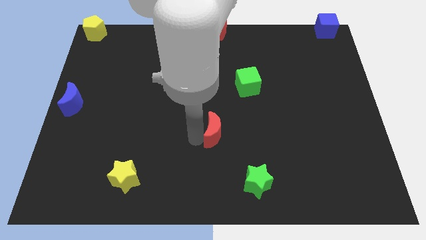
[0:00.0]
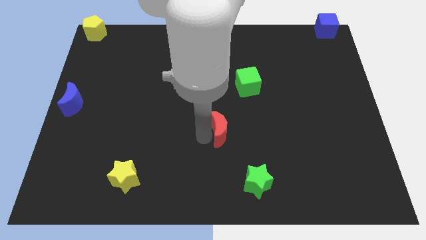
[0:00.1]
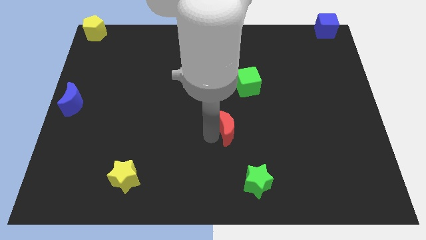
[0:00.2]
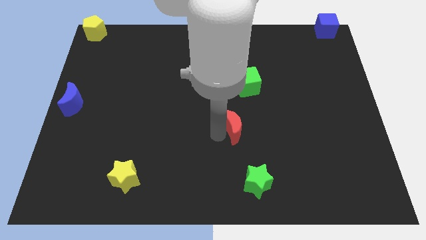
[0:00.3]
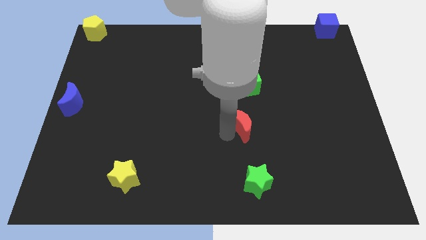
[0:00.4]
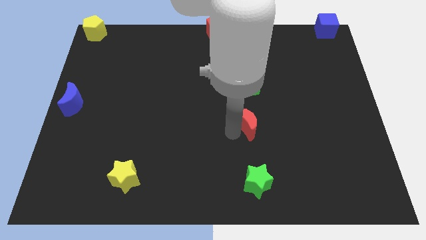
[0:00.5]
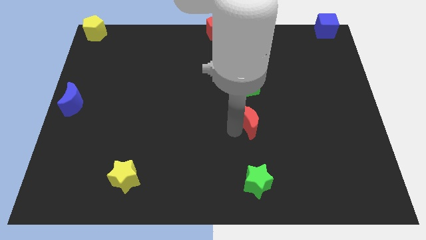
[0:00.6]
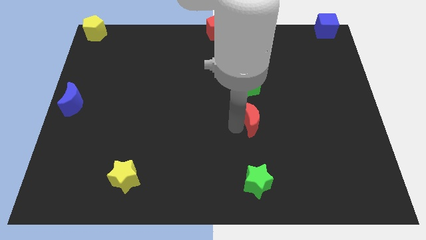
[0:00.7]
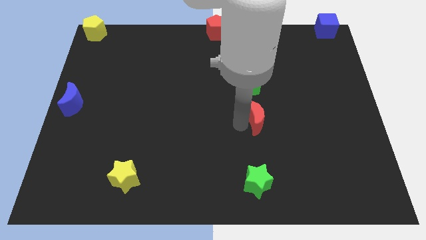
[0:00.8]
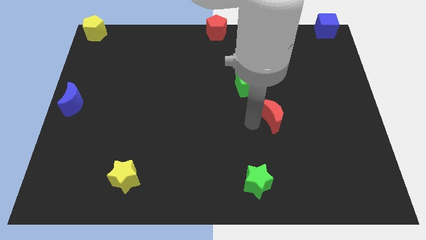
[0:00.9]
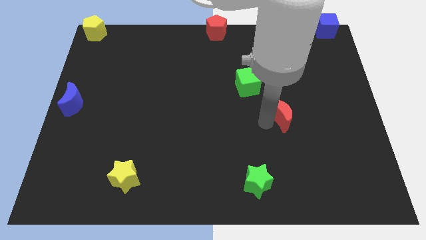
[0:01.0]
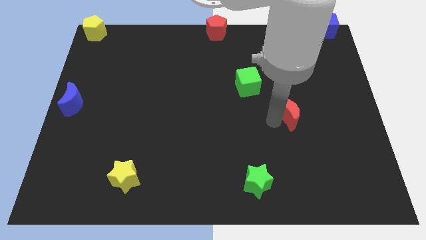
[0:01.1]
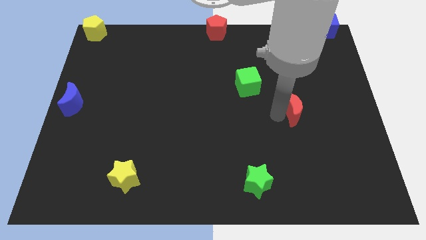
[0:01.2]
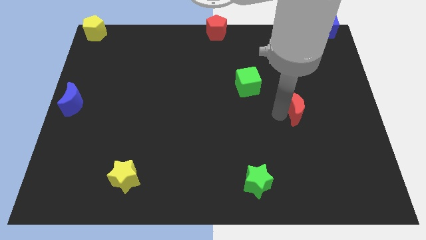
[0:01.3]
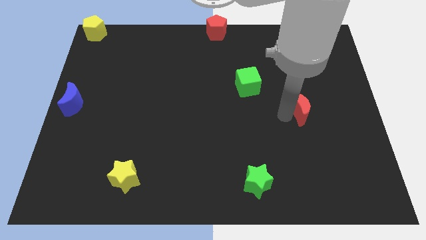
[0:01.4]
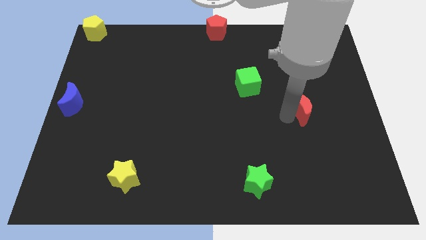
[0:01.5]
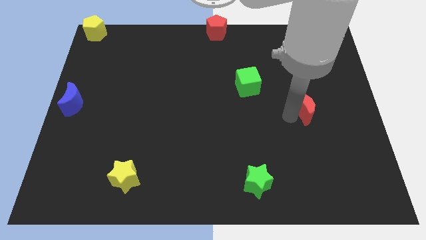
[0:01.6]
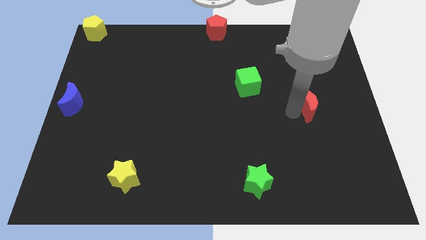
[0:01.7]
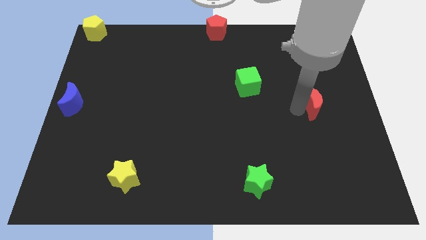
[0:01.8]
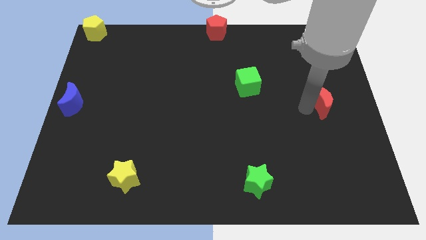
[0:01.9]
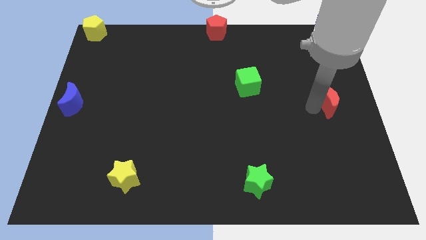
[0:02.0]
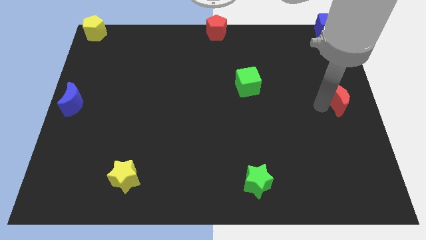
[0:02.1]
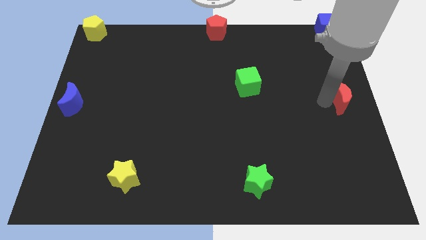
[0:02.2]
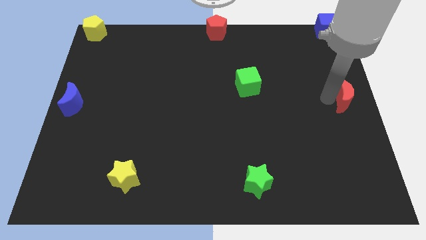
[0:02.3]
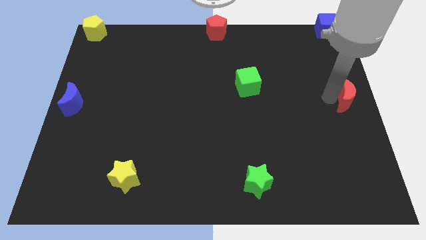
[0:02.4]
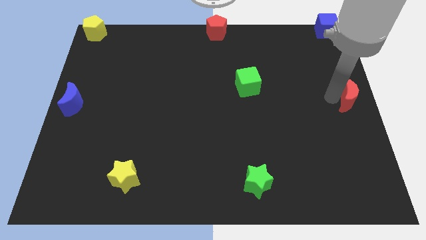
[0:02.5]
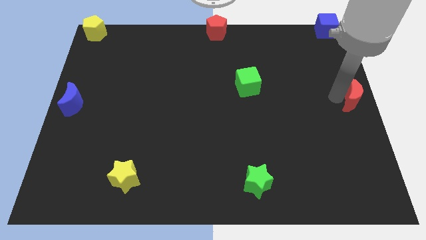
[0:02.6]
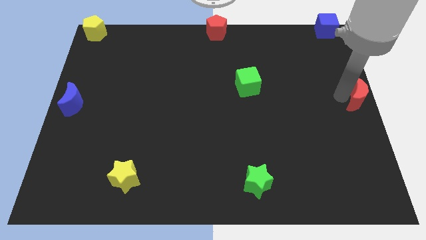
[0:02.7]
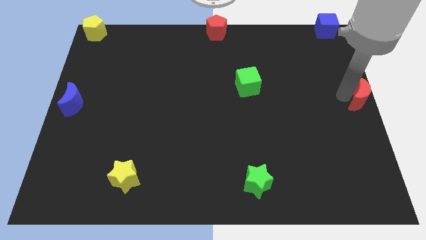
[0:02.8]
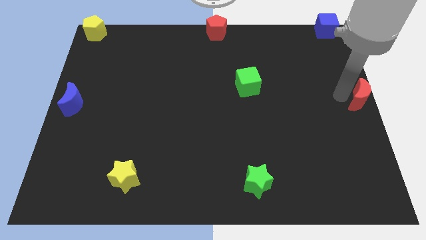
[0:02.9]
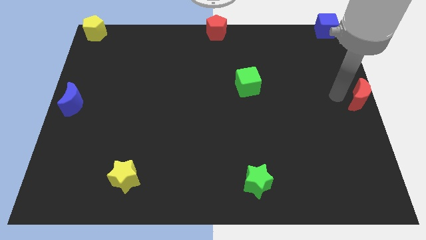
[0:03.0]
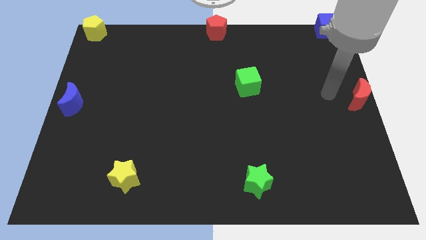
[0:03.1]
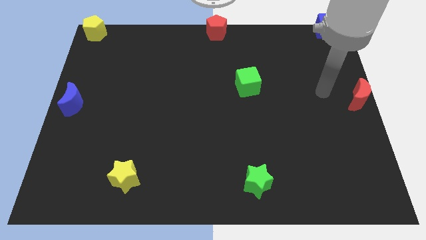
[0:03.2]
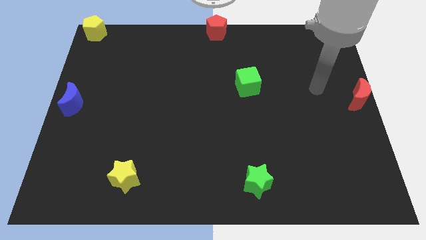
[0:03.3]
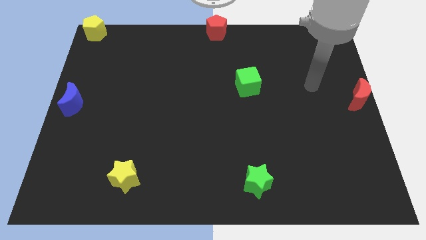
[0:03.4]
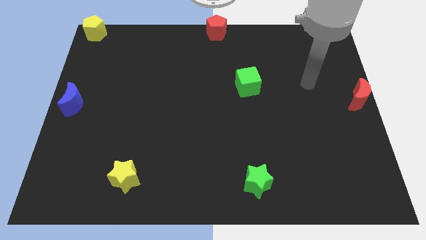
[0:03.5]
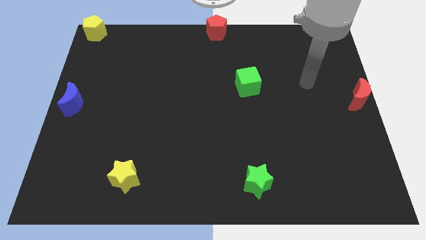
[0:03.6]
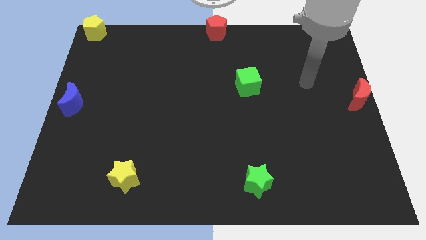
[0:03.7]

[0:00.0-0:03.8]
drag the red moon to the center right side of the board

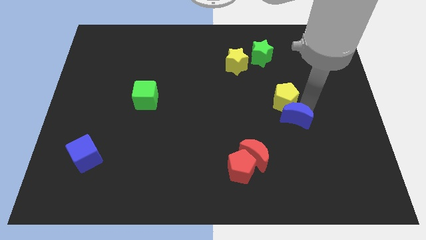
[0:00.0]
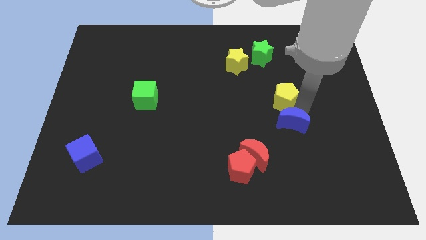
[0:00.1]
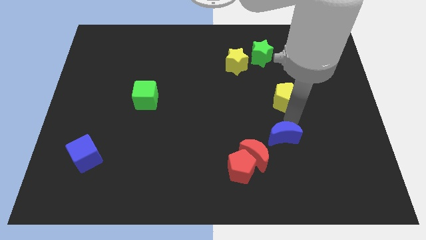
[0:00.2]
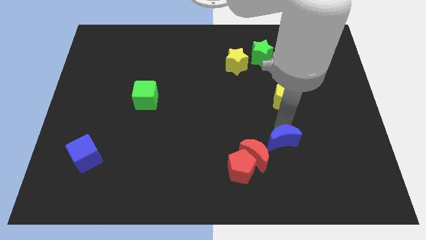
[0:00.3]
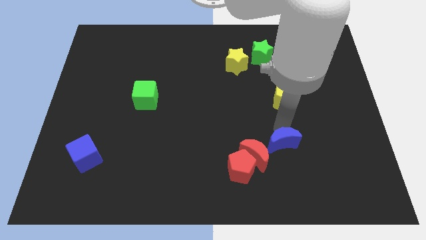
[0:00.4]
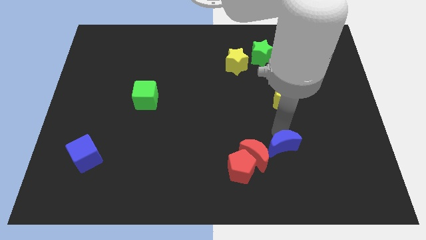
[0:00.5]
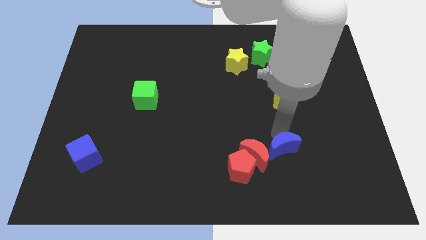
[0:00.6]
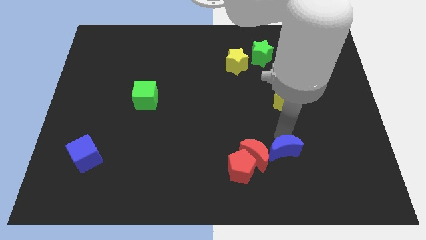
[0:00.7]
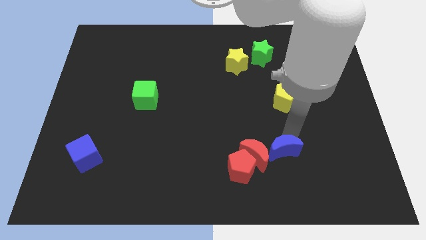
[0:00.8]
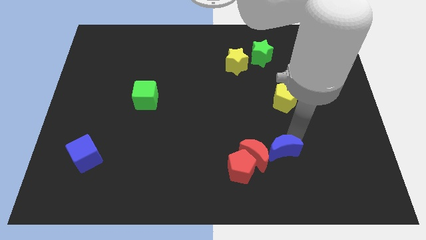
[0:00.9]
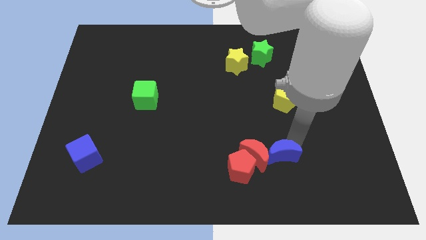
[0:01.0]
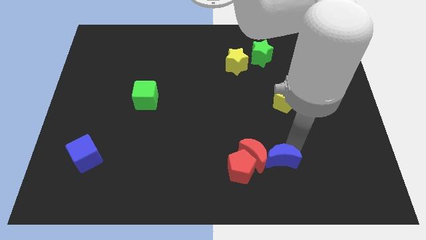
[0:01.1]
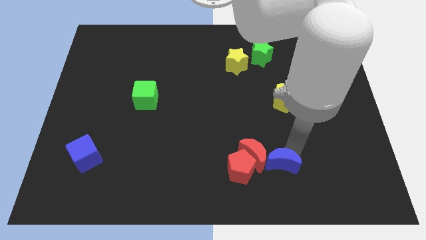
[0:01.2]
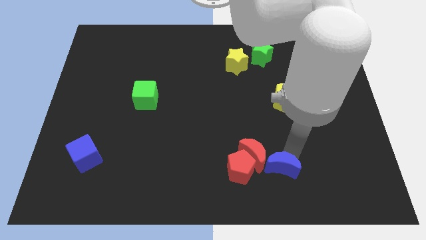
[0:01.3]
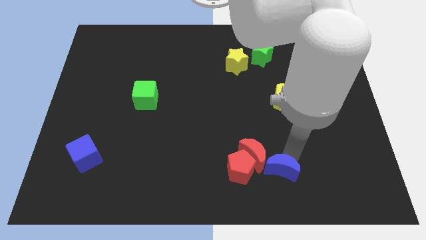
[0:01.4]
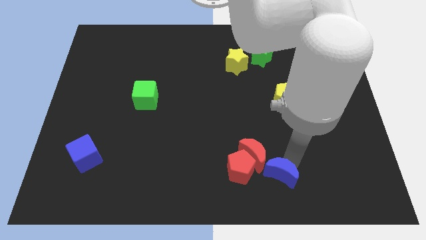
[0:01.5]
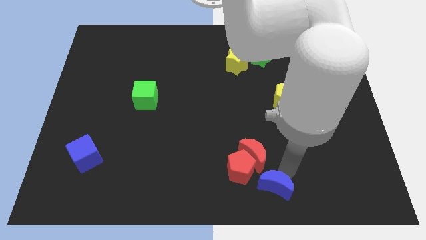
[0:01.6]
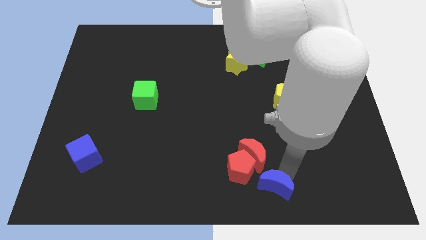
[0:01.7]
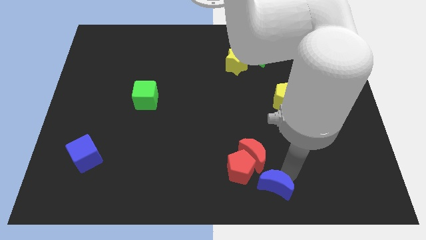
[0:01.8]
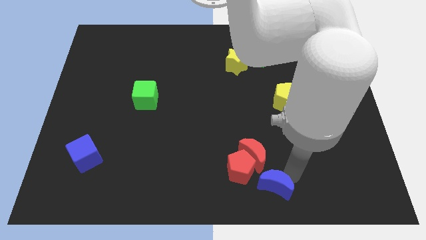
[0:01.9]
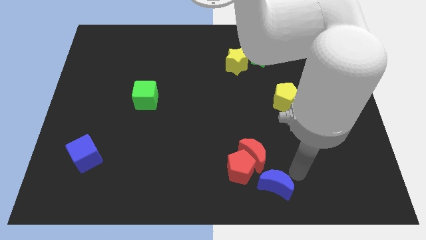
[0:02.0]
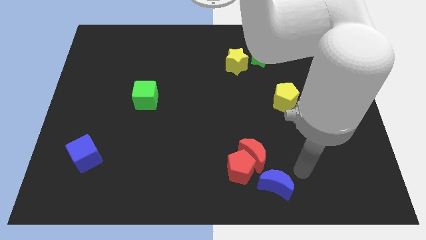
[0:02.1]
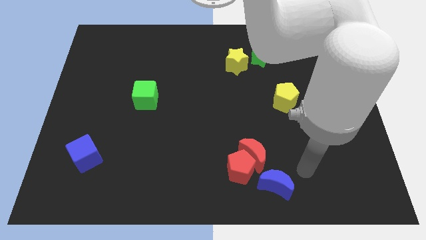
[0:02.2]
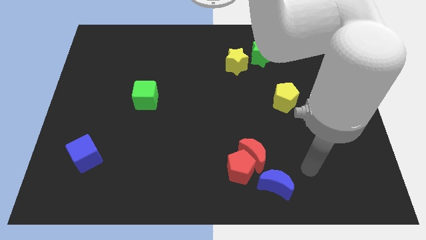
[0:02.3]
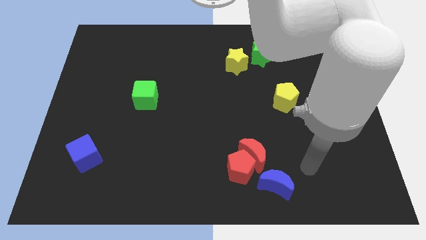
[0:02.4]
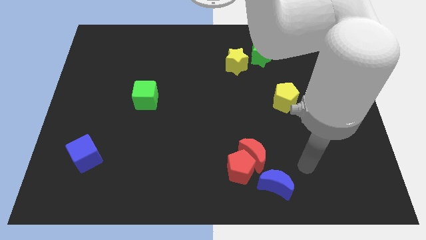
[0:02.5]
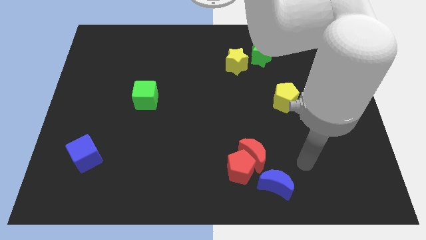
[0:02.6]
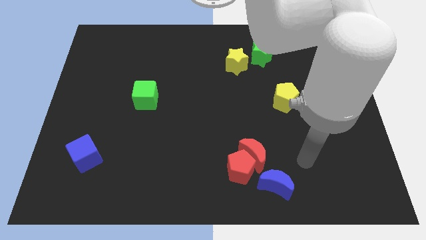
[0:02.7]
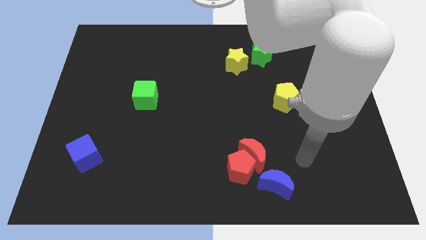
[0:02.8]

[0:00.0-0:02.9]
slide the blue moon diagonally to the bottom right of the red moon

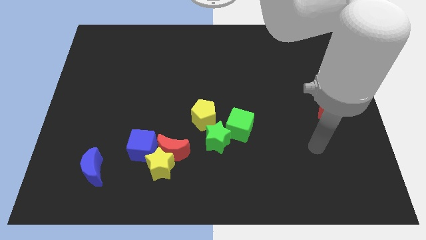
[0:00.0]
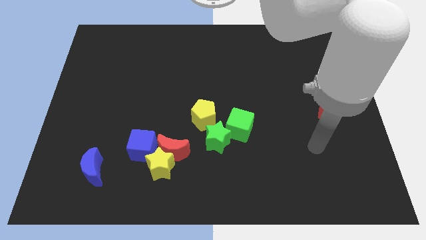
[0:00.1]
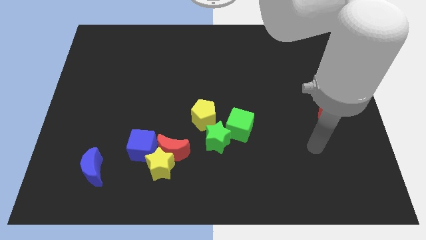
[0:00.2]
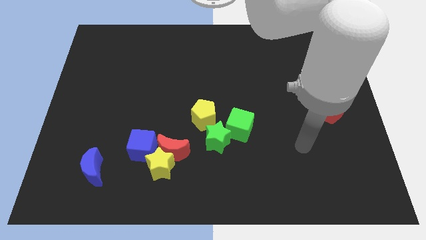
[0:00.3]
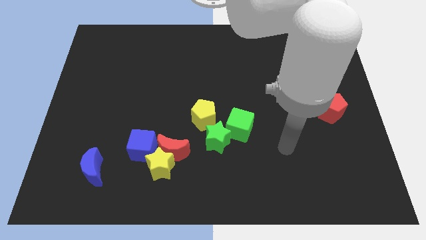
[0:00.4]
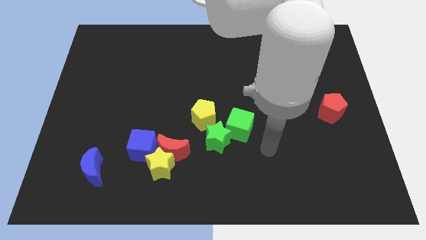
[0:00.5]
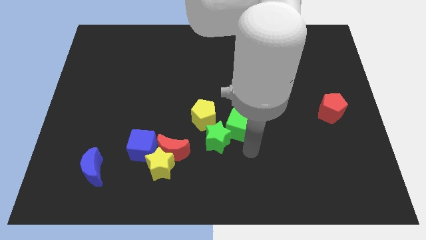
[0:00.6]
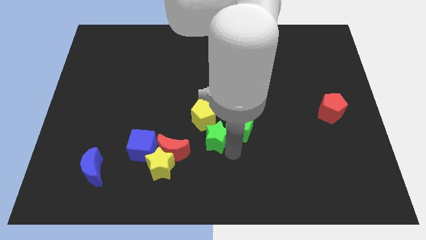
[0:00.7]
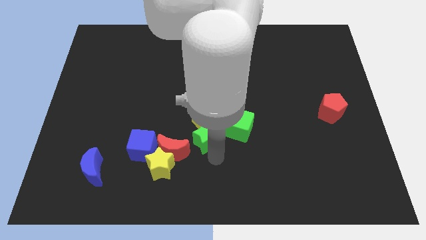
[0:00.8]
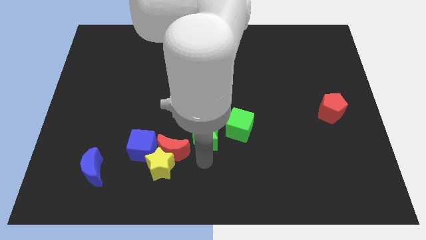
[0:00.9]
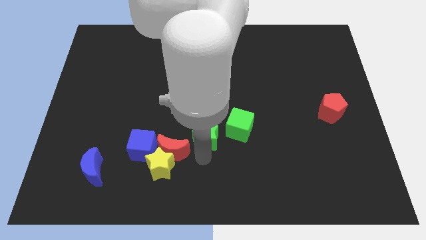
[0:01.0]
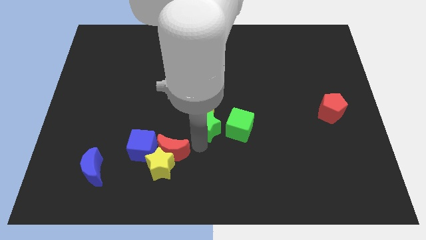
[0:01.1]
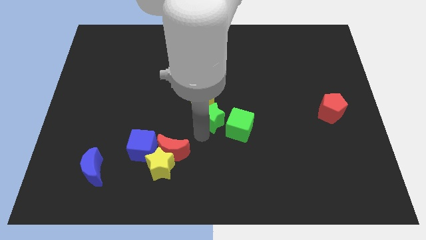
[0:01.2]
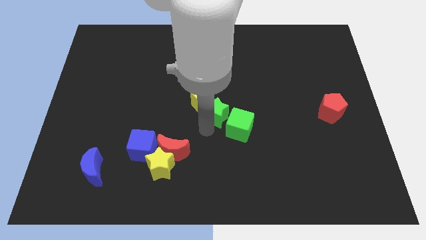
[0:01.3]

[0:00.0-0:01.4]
move the green star into the yellow pentagon

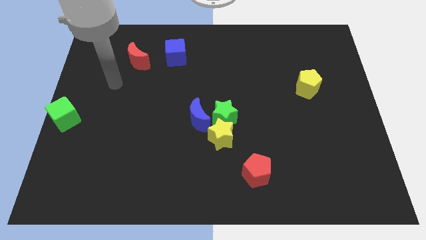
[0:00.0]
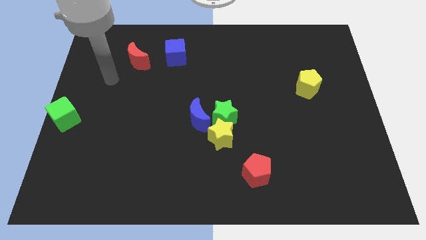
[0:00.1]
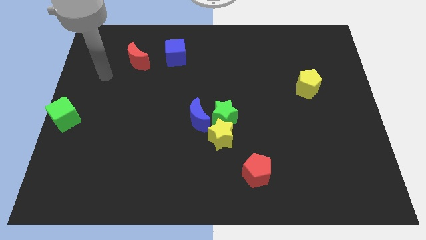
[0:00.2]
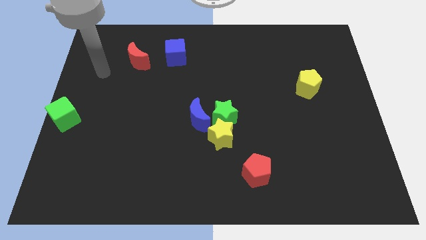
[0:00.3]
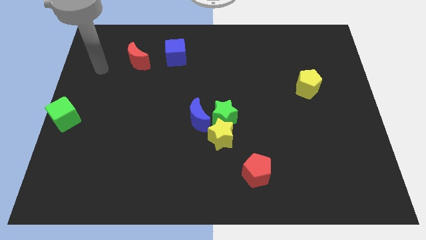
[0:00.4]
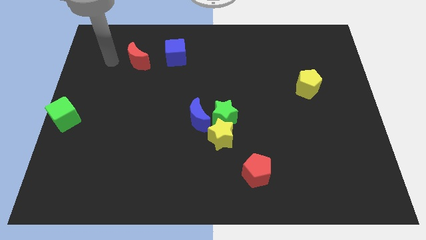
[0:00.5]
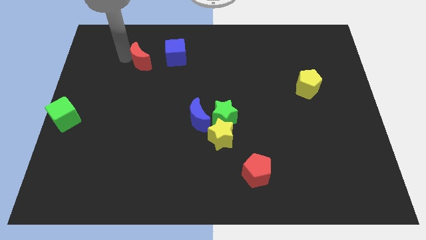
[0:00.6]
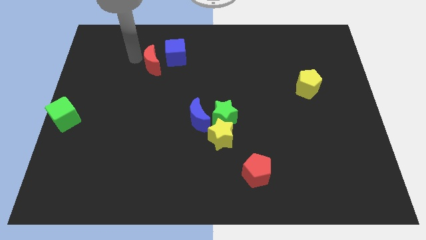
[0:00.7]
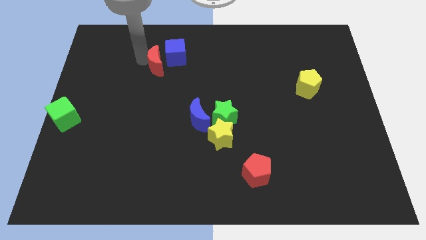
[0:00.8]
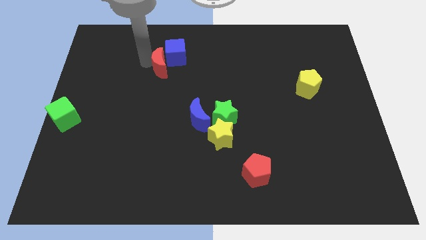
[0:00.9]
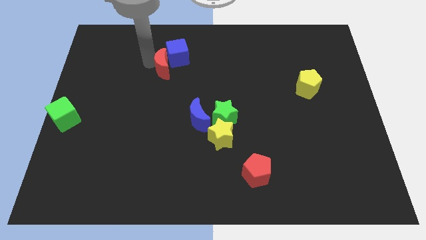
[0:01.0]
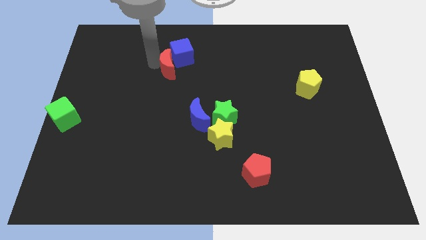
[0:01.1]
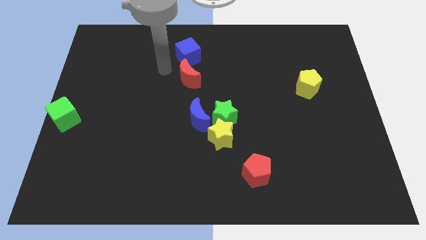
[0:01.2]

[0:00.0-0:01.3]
move the red crescent to the bottom of the blue cube
